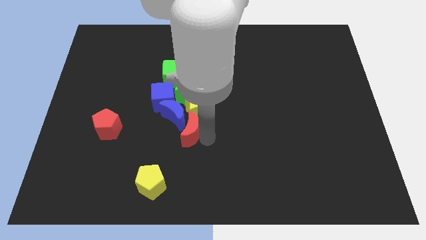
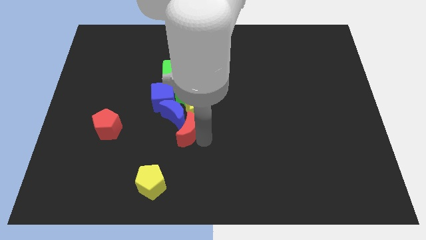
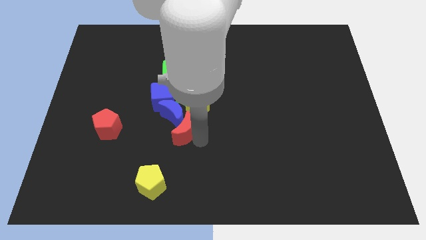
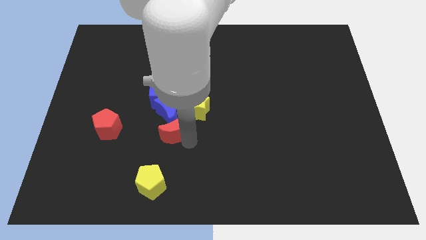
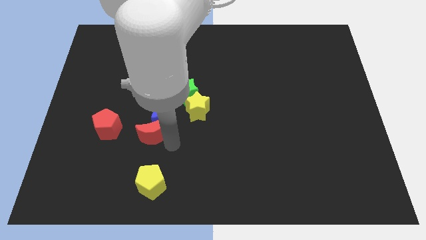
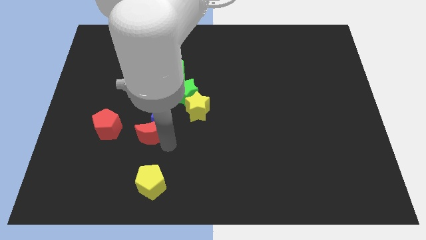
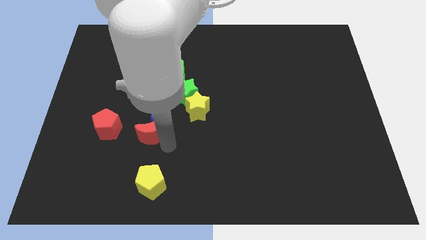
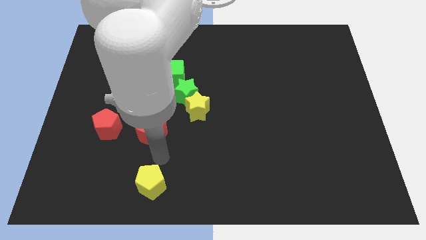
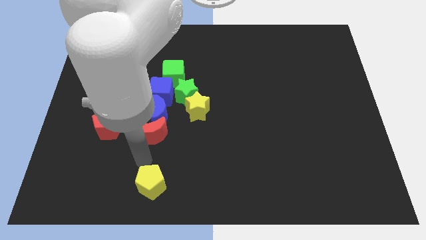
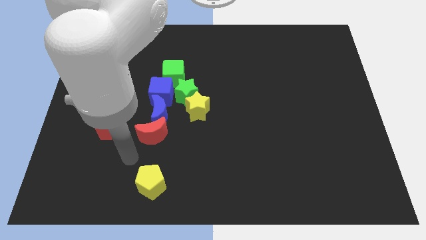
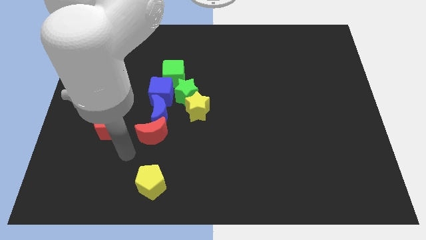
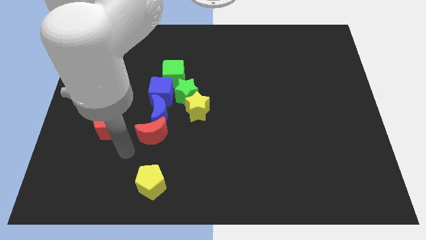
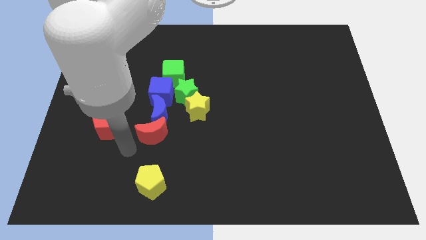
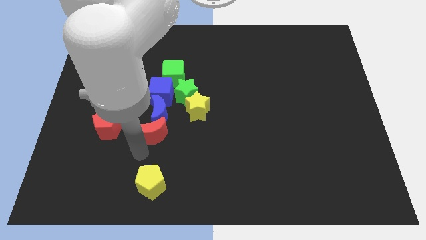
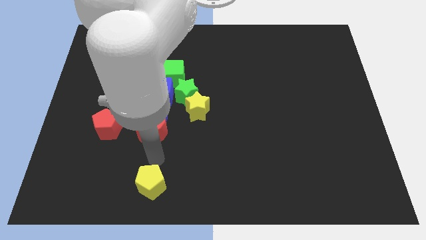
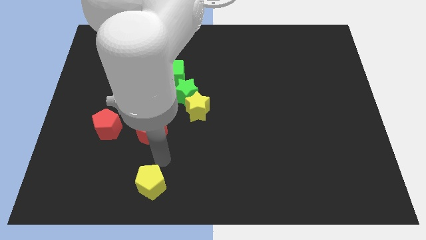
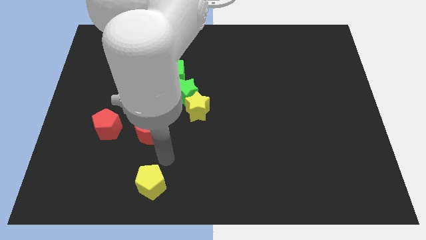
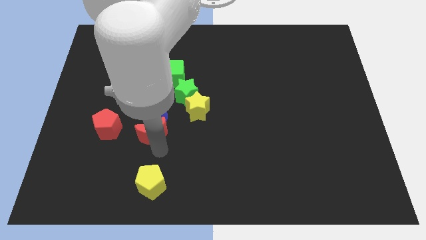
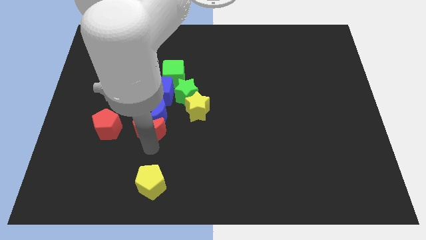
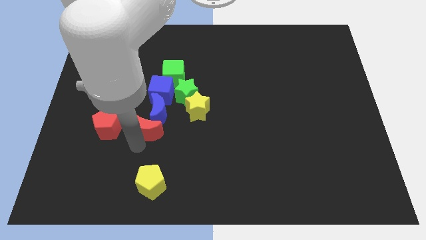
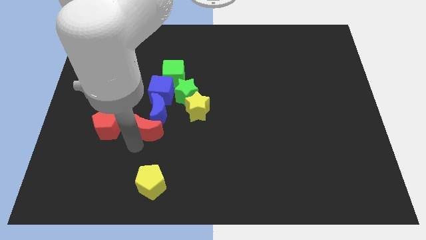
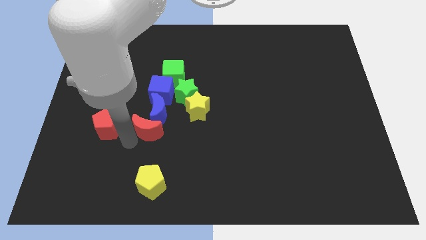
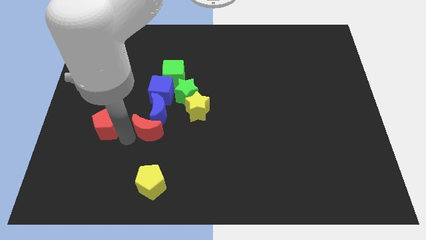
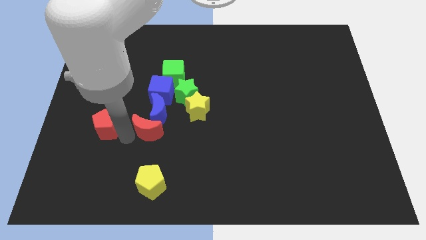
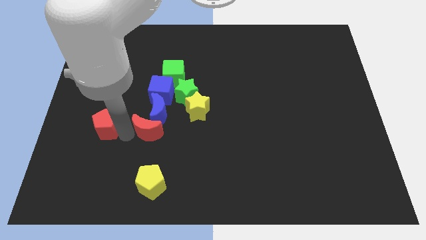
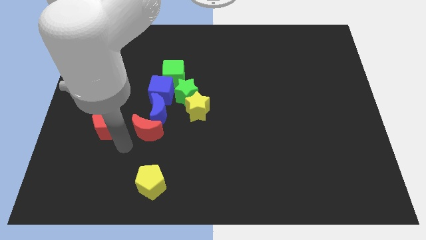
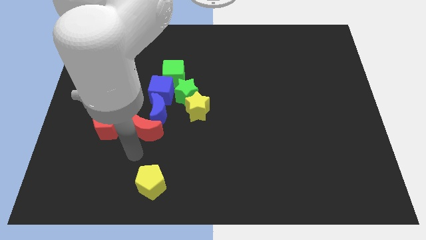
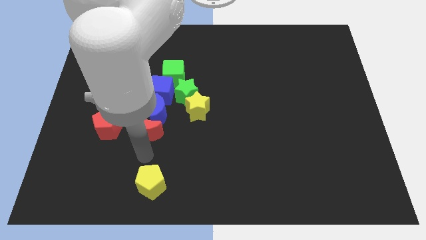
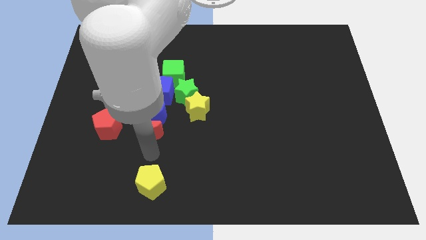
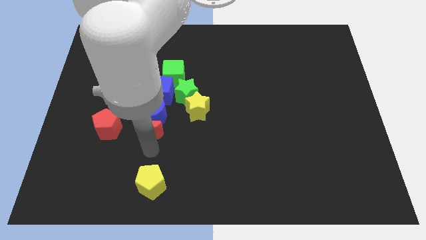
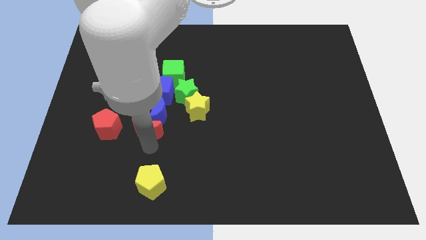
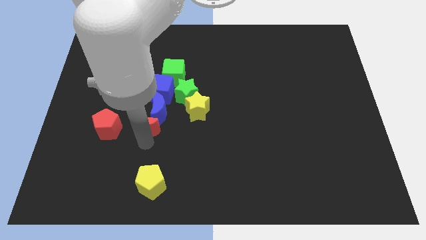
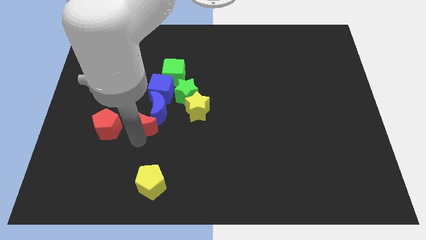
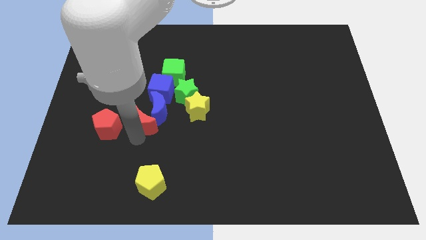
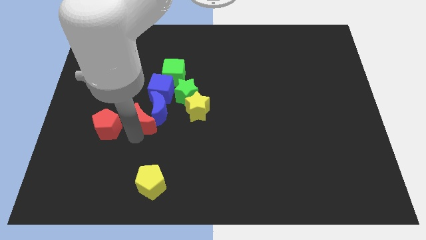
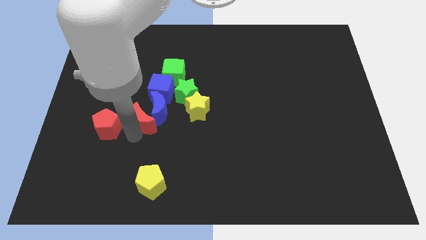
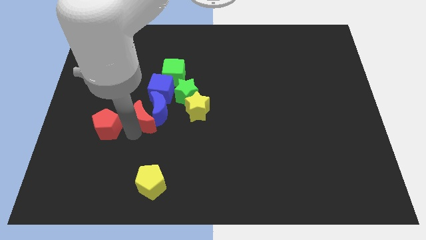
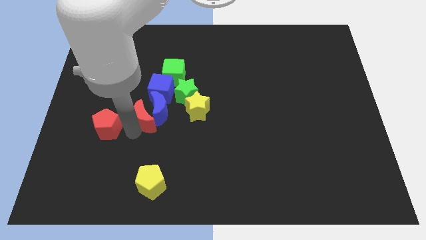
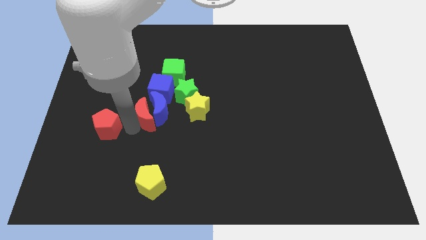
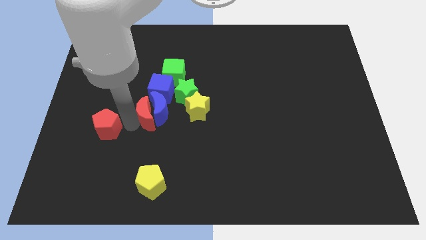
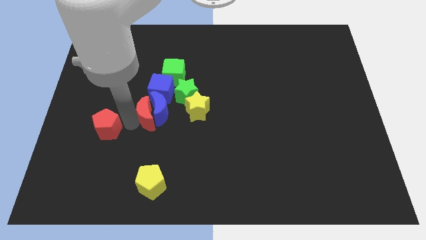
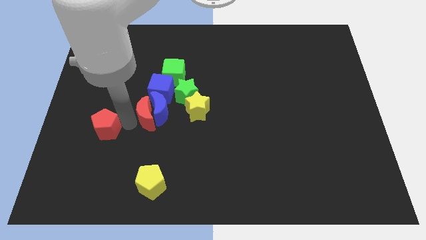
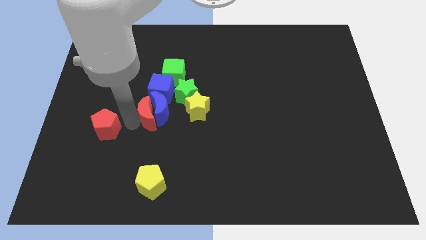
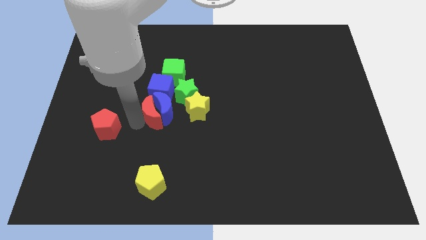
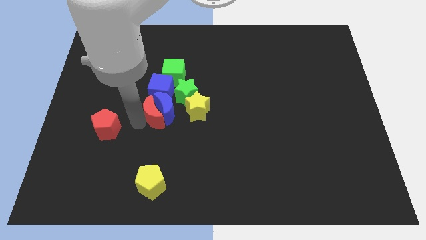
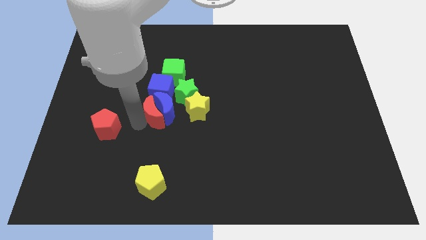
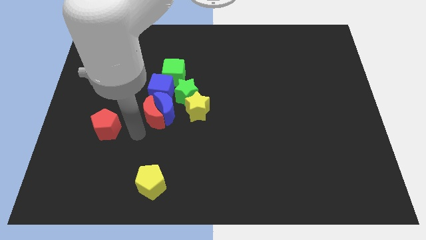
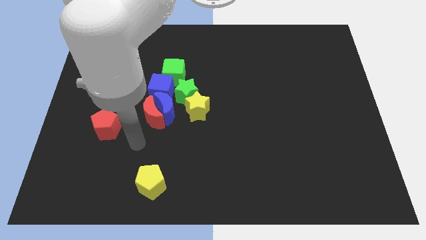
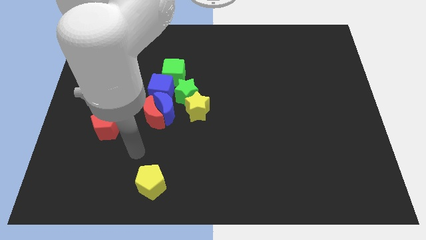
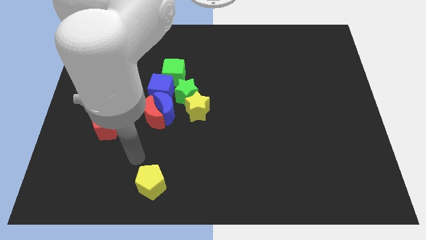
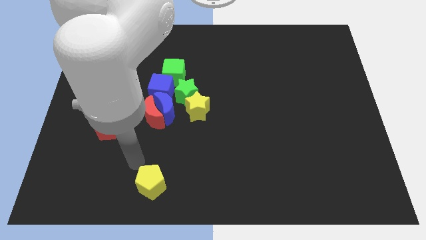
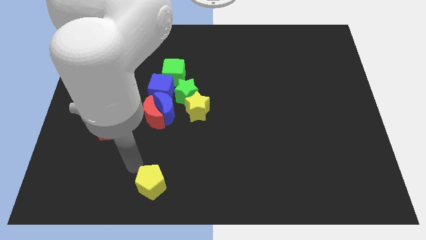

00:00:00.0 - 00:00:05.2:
move the red moon left beside the blue moon

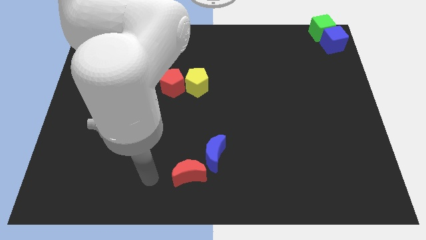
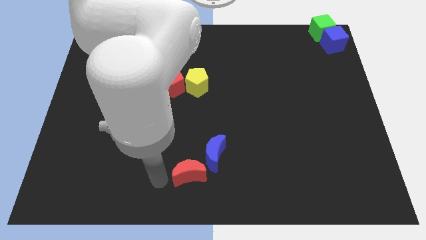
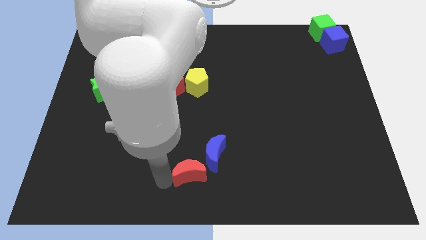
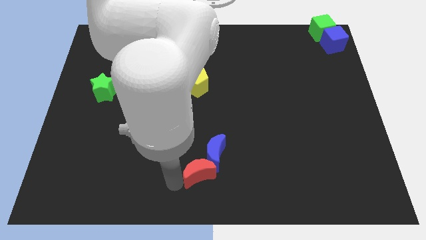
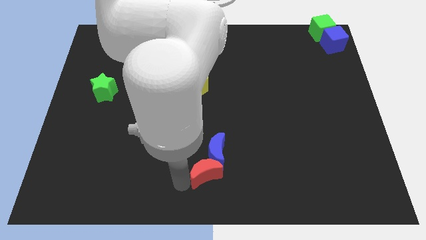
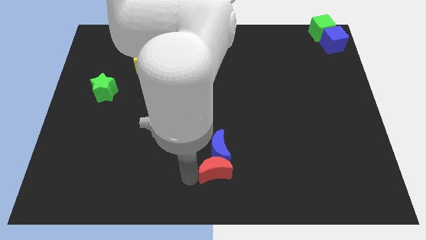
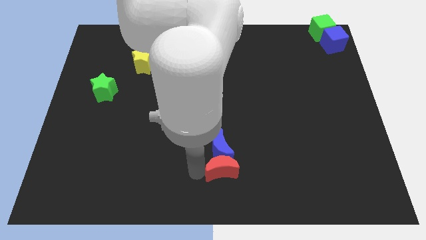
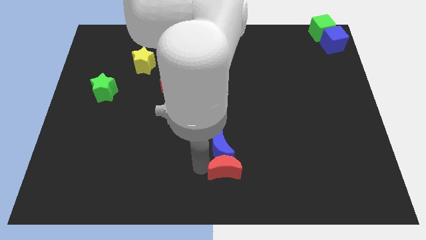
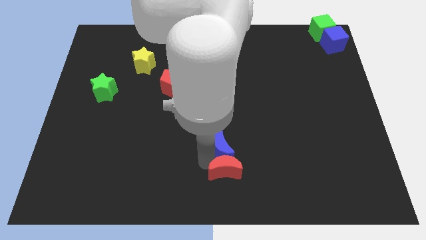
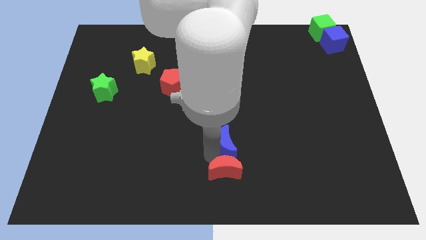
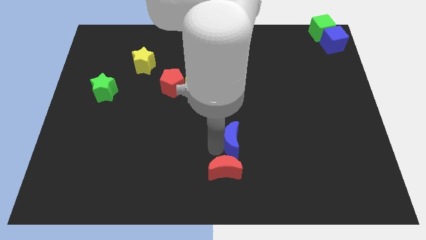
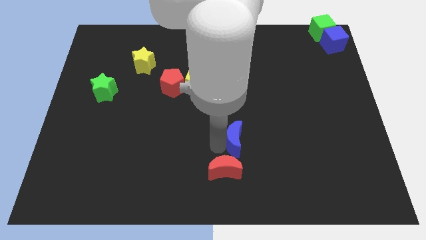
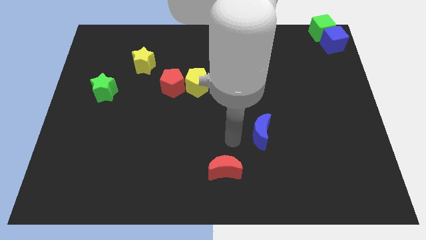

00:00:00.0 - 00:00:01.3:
push the red crescent into the blue crescent

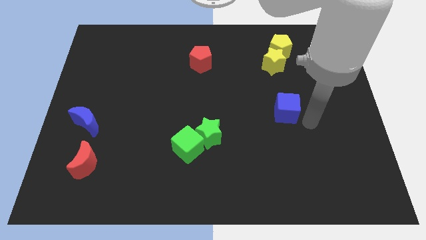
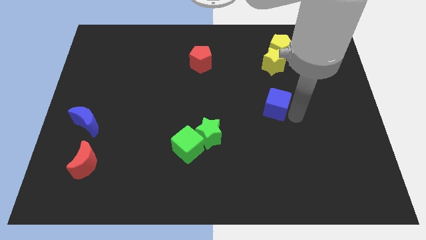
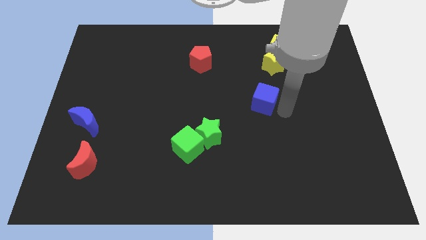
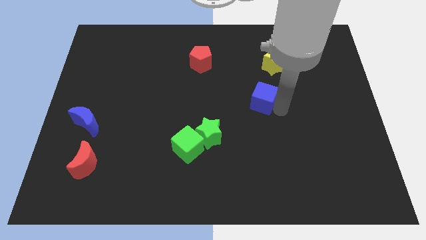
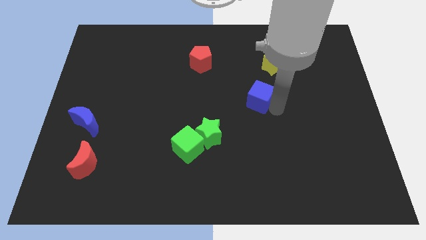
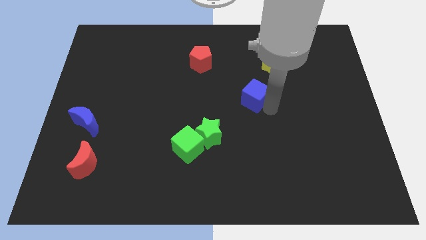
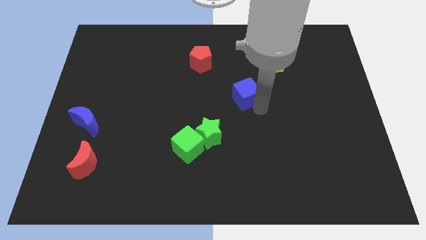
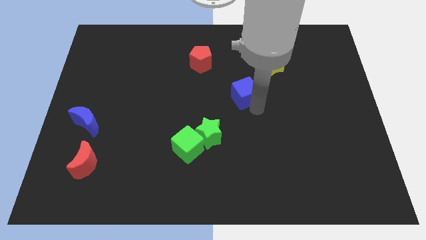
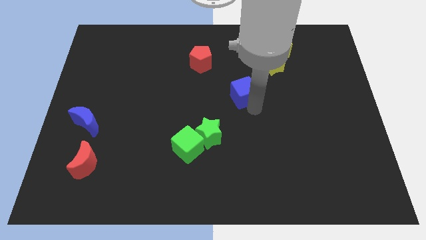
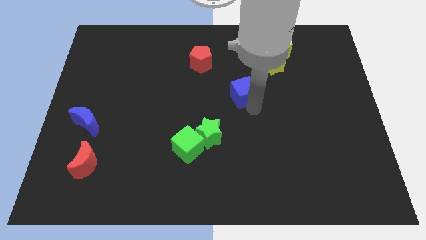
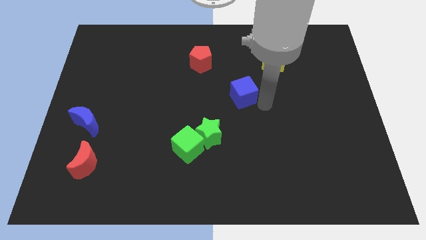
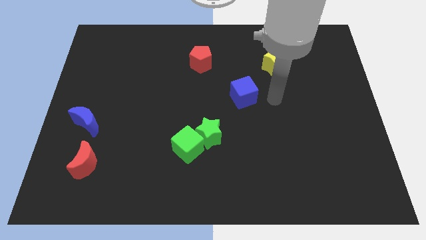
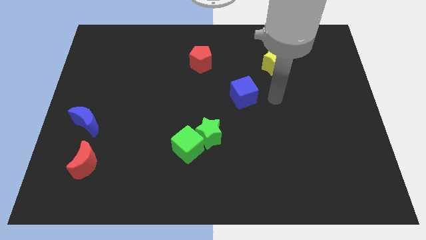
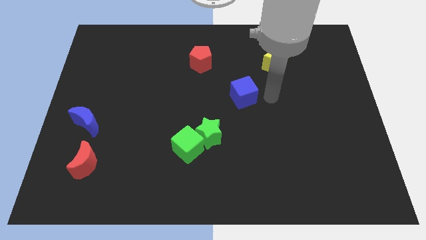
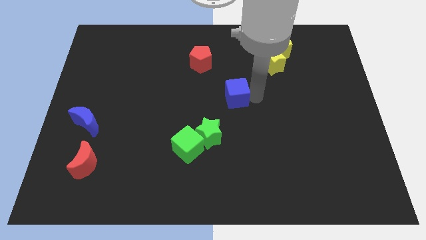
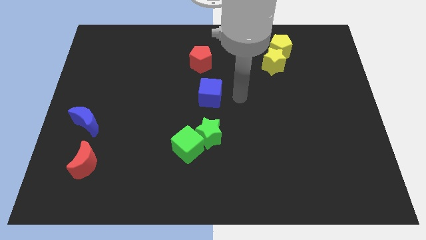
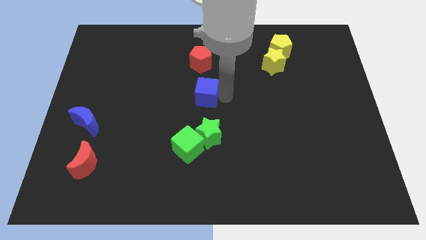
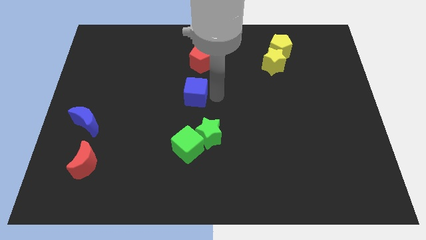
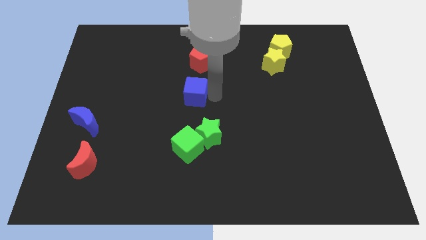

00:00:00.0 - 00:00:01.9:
move the blue cube below red pentagon

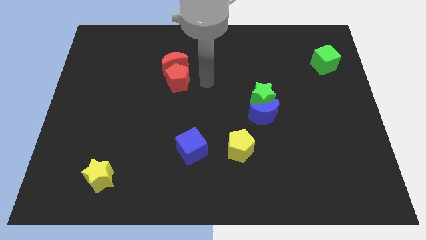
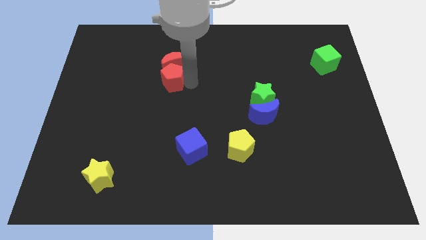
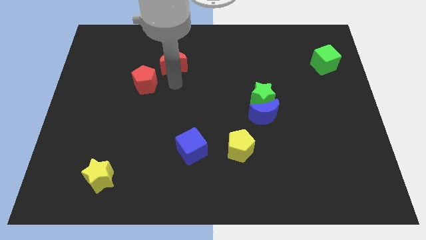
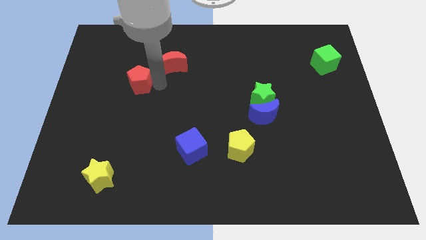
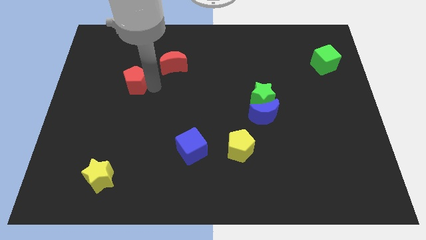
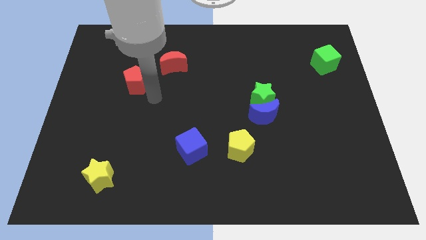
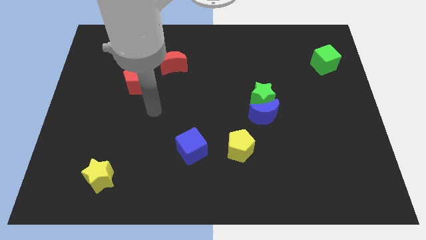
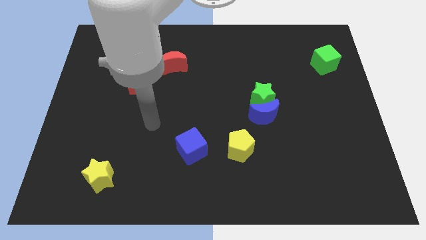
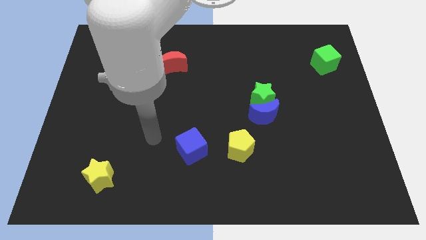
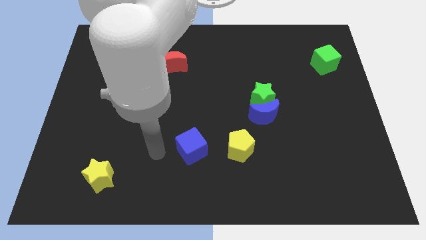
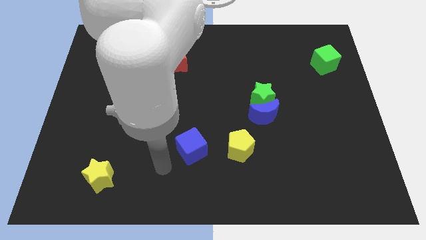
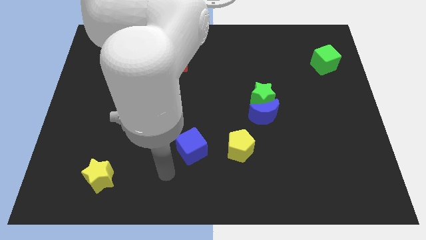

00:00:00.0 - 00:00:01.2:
separate the red pentagon from the red moon
